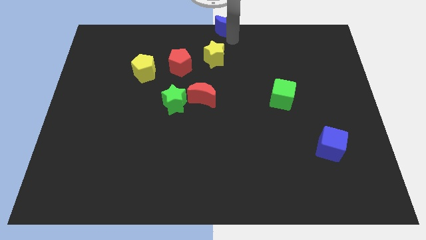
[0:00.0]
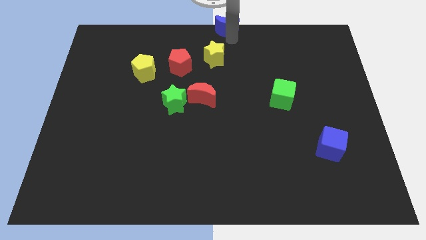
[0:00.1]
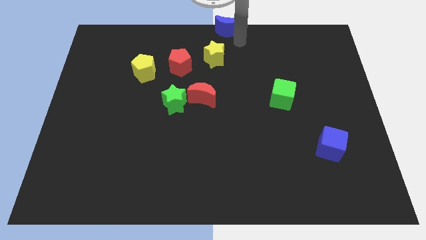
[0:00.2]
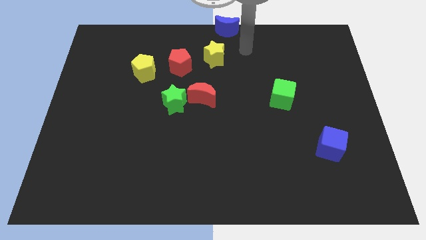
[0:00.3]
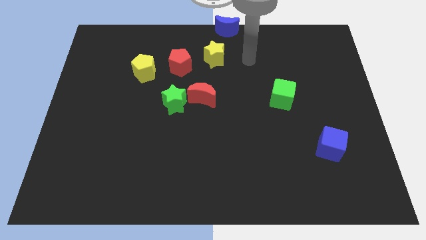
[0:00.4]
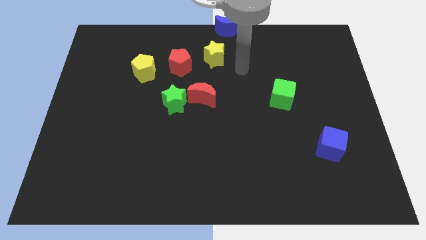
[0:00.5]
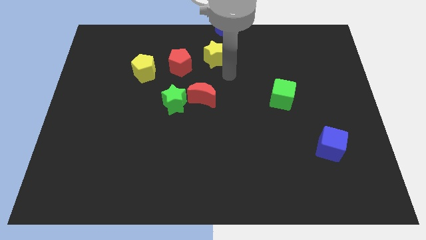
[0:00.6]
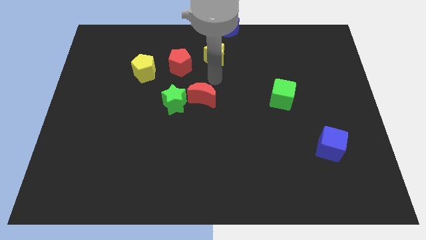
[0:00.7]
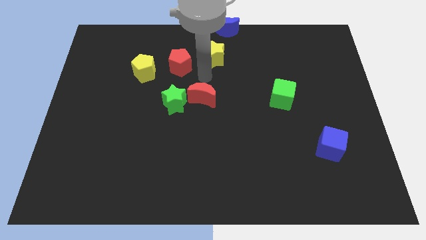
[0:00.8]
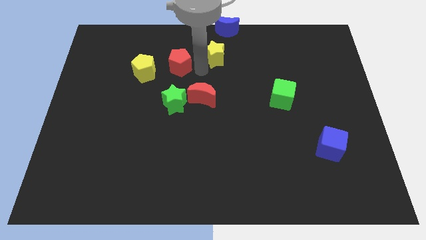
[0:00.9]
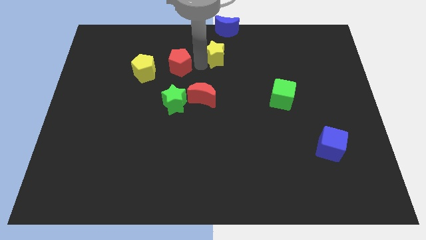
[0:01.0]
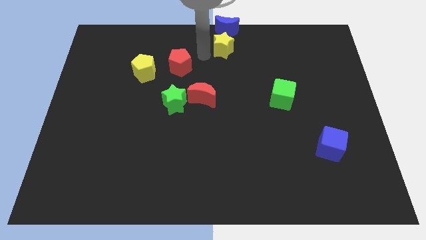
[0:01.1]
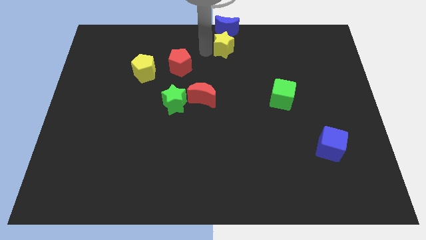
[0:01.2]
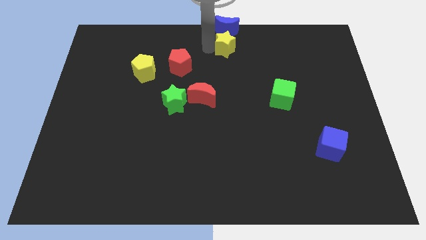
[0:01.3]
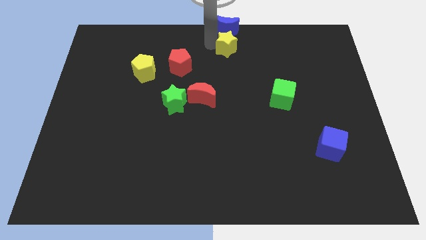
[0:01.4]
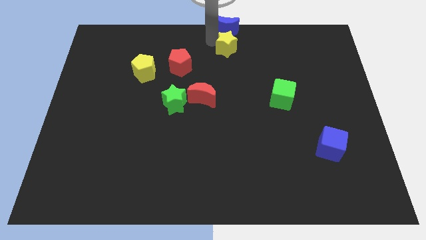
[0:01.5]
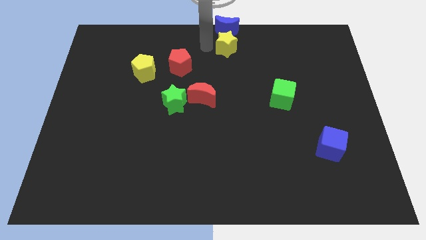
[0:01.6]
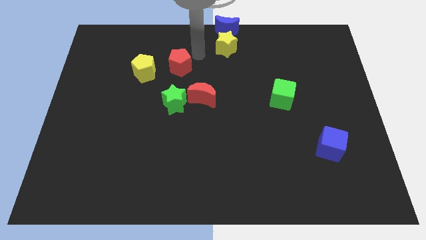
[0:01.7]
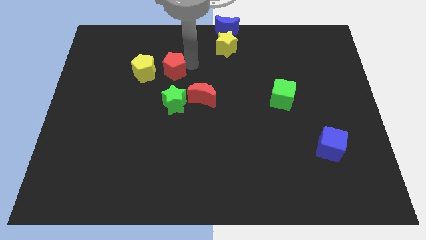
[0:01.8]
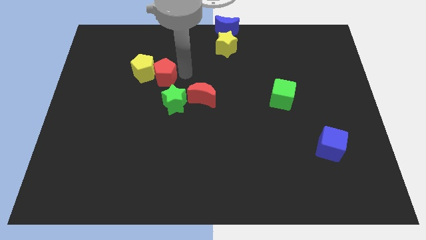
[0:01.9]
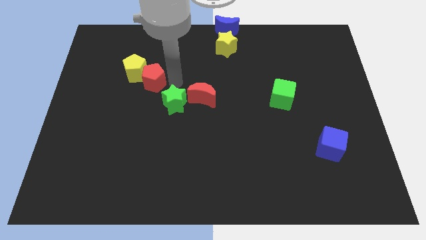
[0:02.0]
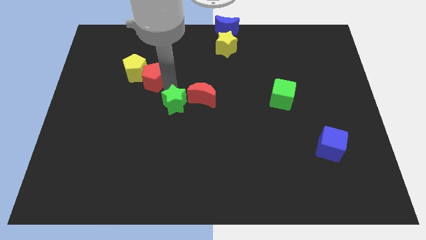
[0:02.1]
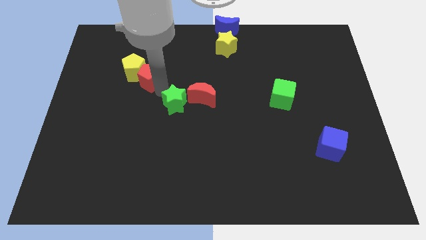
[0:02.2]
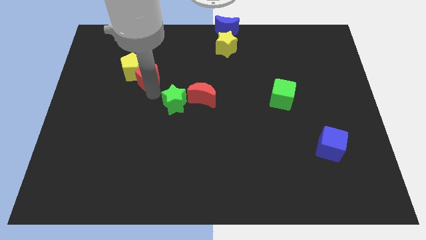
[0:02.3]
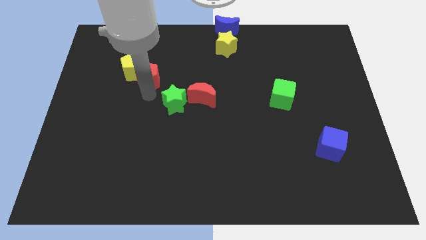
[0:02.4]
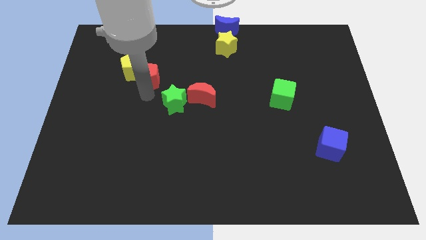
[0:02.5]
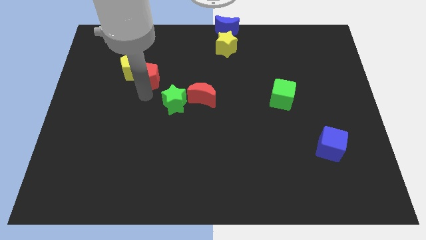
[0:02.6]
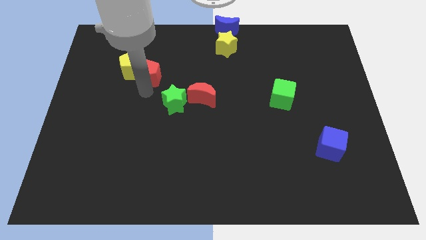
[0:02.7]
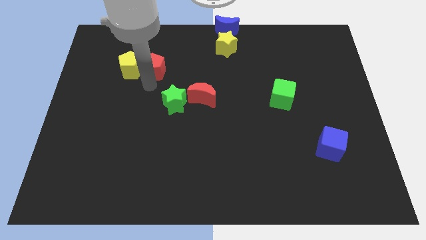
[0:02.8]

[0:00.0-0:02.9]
place thee yellow pentagon below the blue moon

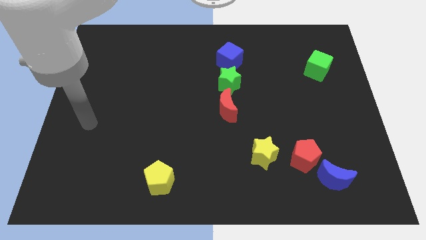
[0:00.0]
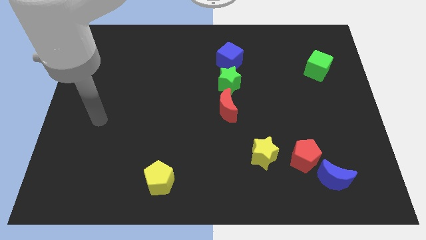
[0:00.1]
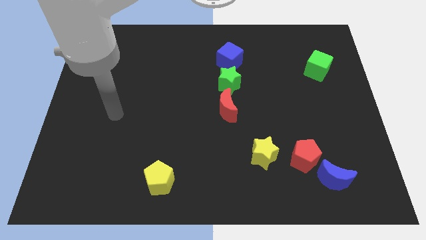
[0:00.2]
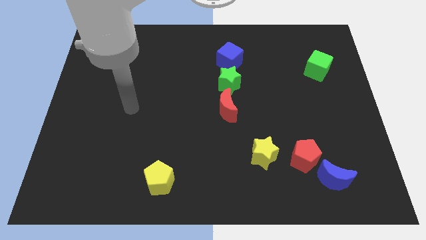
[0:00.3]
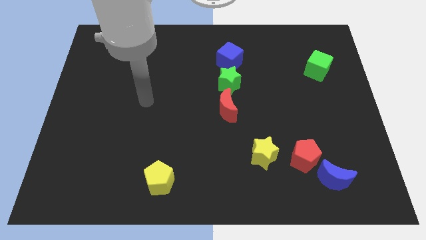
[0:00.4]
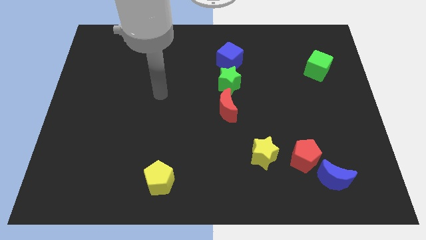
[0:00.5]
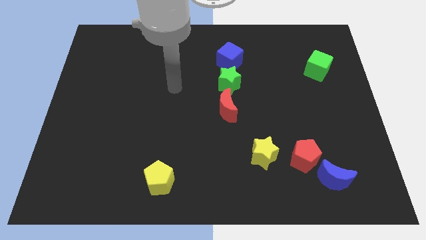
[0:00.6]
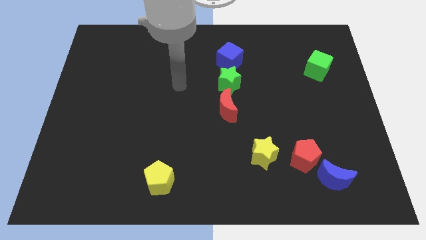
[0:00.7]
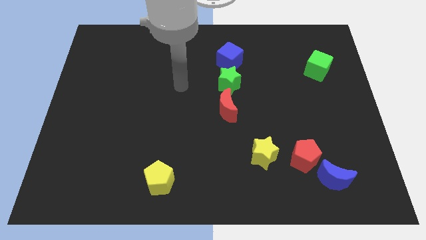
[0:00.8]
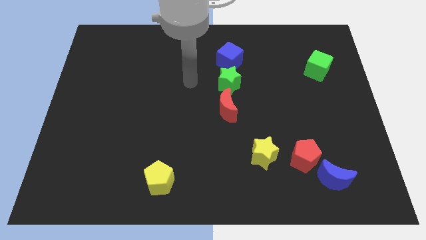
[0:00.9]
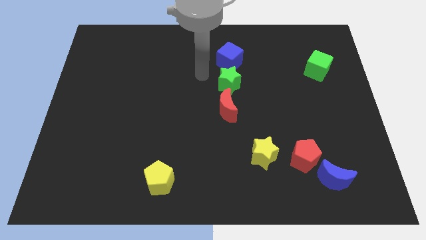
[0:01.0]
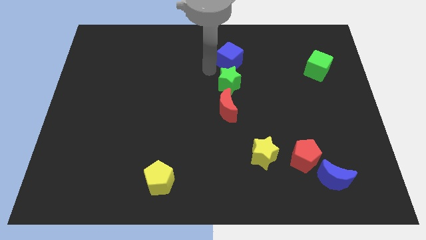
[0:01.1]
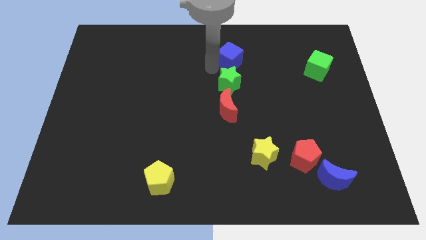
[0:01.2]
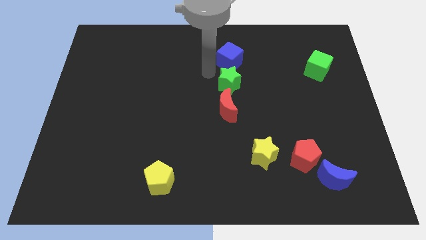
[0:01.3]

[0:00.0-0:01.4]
move your arm towards the blue cube

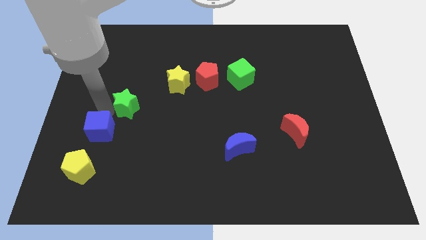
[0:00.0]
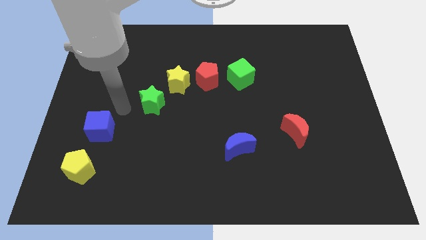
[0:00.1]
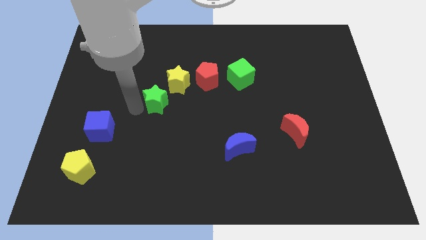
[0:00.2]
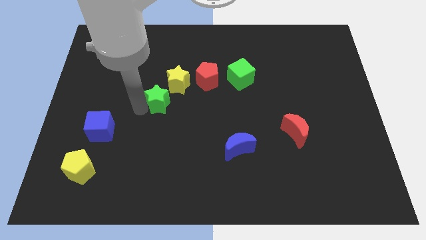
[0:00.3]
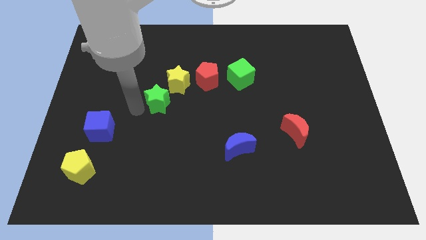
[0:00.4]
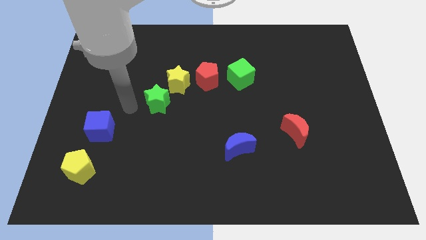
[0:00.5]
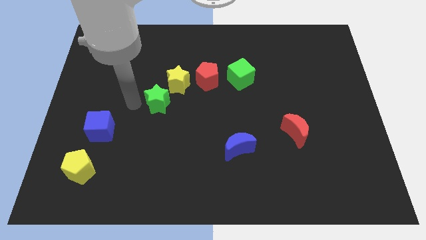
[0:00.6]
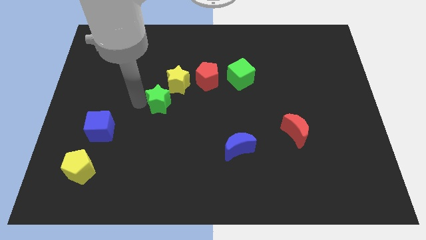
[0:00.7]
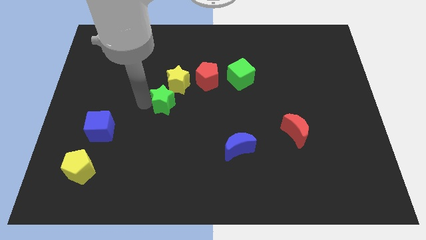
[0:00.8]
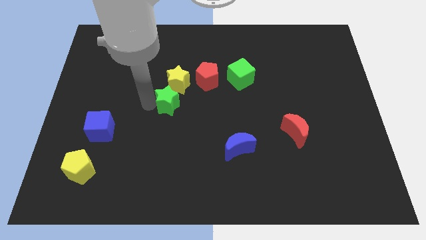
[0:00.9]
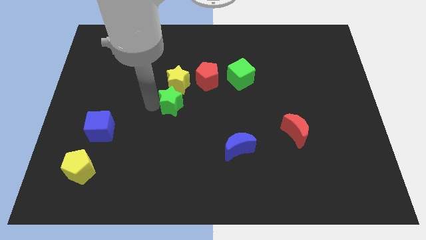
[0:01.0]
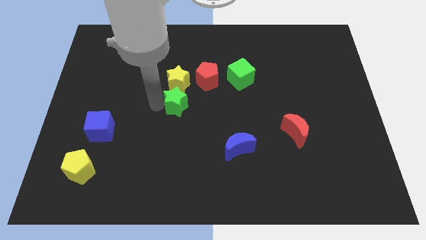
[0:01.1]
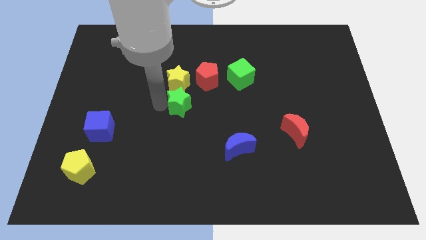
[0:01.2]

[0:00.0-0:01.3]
place the green star below the yellow star

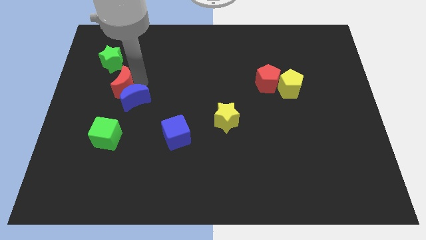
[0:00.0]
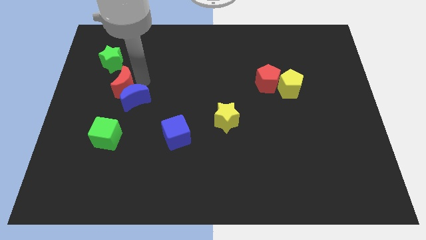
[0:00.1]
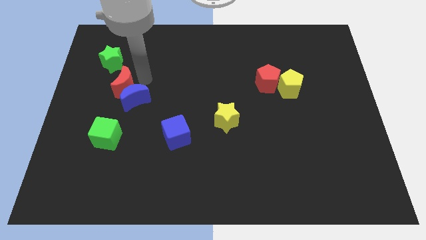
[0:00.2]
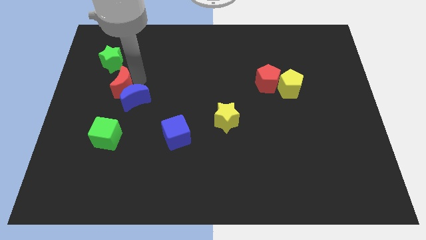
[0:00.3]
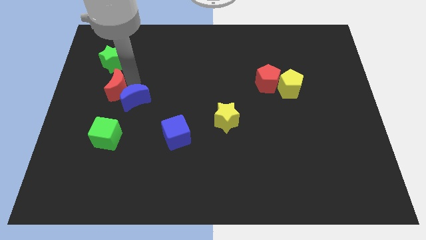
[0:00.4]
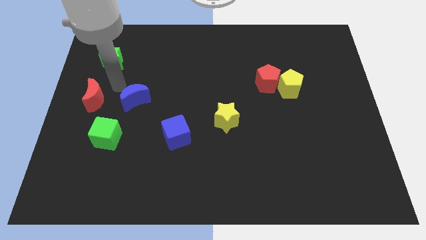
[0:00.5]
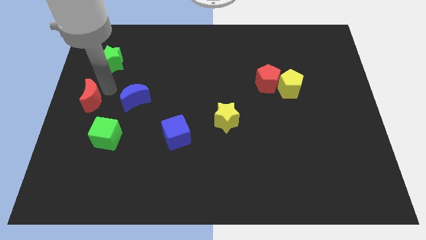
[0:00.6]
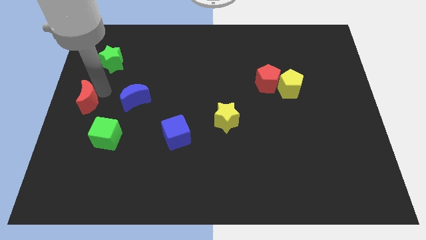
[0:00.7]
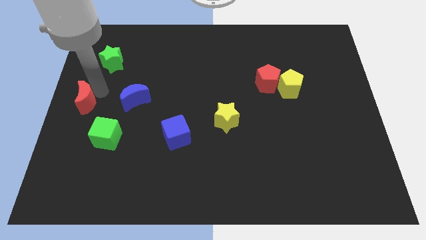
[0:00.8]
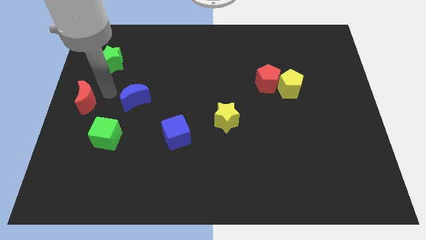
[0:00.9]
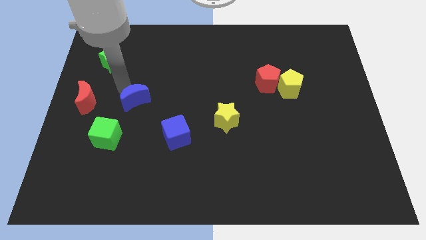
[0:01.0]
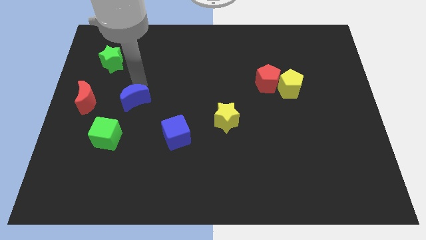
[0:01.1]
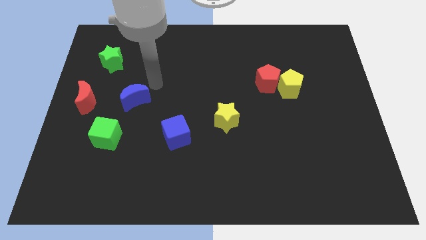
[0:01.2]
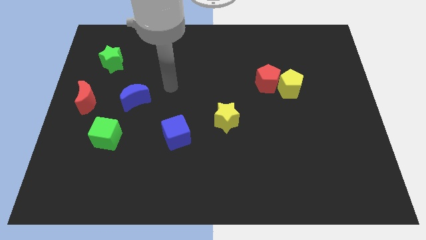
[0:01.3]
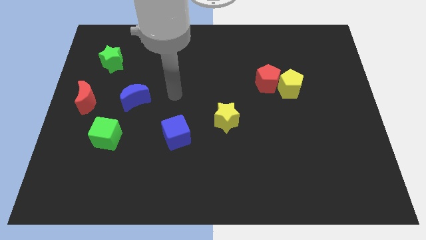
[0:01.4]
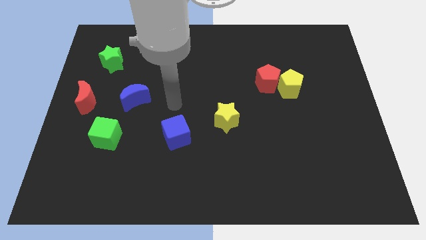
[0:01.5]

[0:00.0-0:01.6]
slide the red moon towards the left center of the board

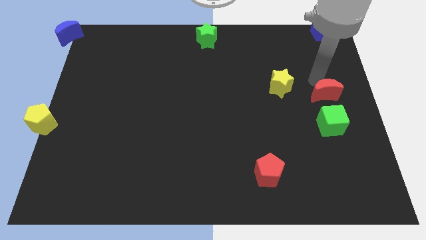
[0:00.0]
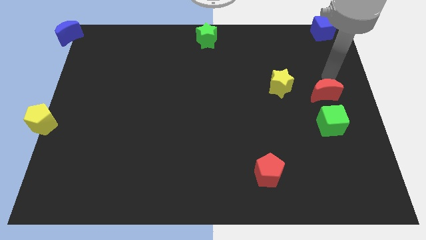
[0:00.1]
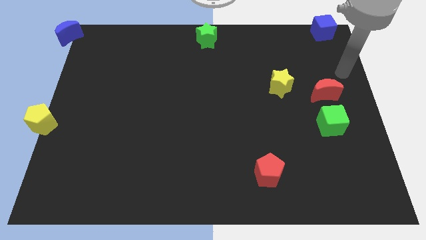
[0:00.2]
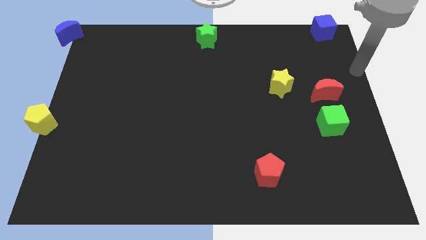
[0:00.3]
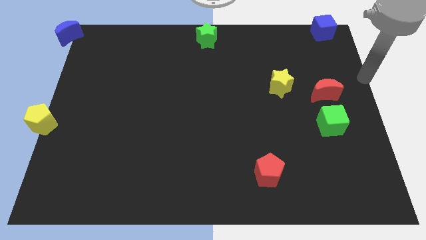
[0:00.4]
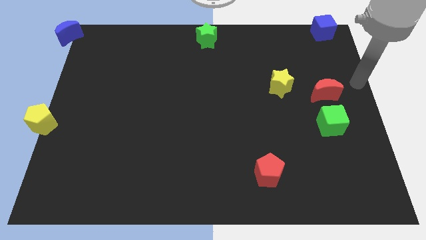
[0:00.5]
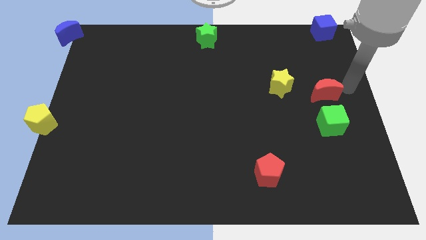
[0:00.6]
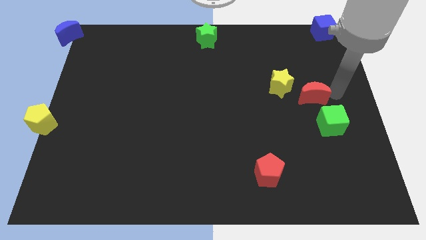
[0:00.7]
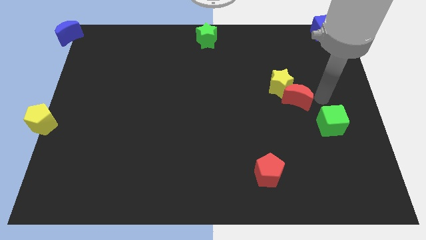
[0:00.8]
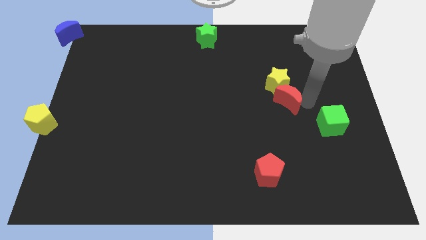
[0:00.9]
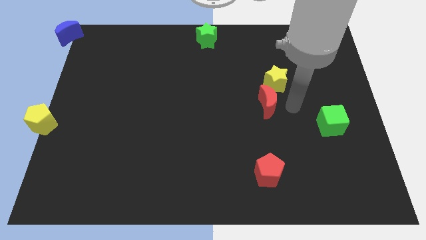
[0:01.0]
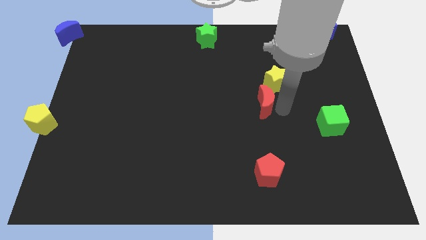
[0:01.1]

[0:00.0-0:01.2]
push the red moon to the bottom left side of the yellow star

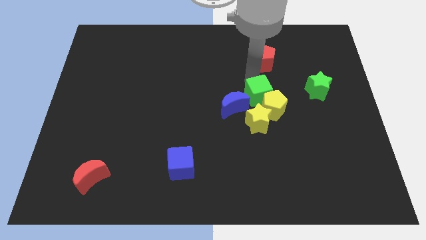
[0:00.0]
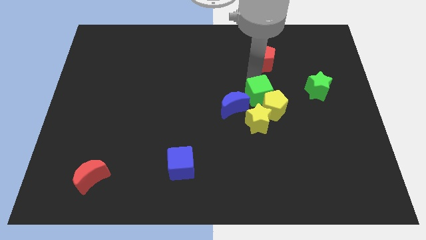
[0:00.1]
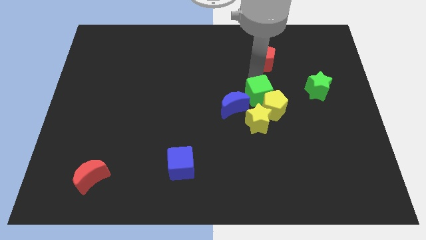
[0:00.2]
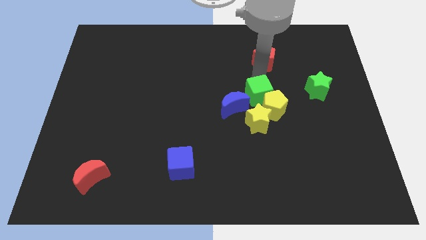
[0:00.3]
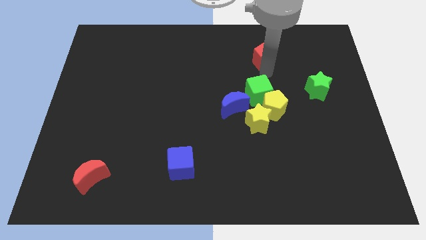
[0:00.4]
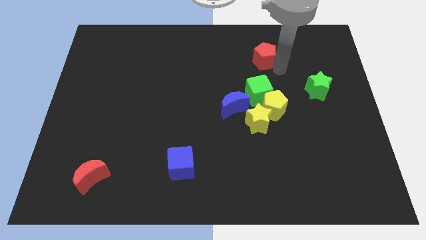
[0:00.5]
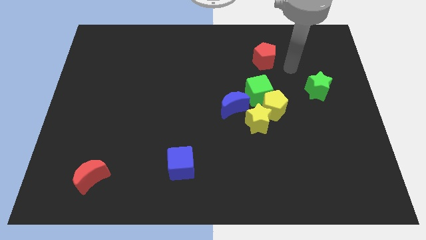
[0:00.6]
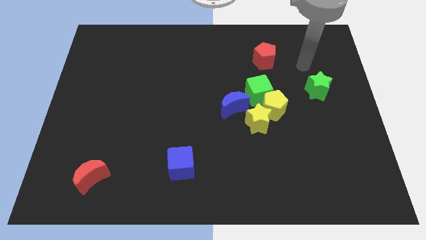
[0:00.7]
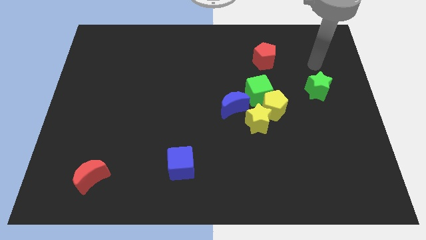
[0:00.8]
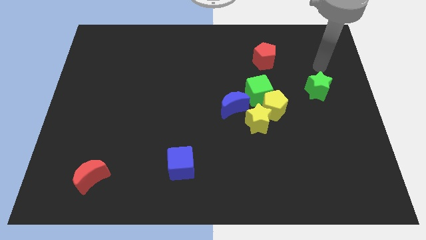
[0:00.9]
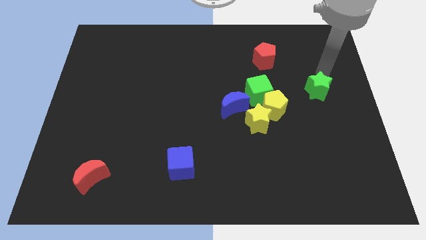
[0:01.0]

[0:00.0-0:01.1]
go to the top side of the green star
